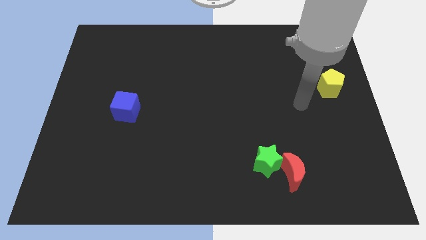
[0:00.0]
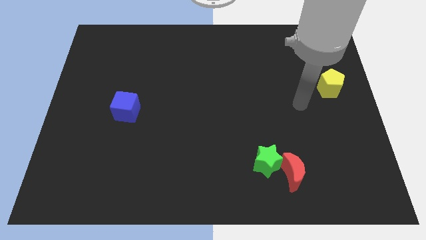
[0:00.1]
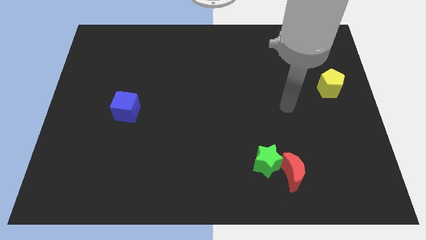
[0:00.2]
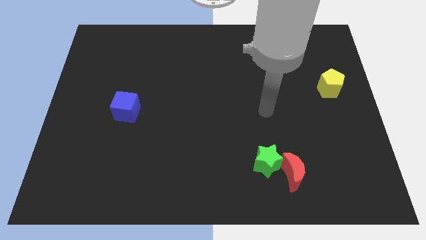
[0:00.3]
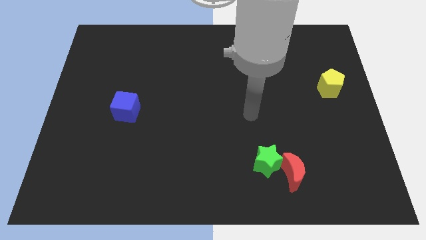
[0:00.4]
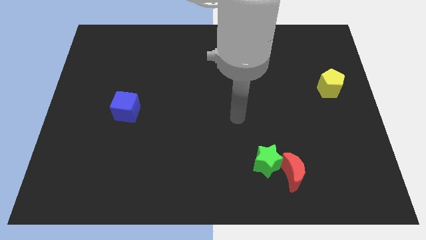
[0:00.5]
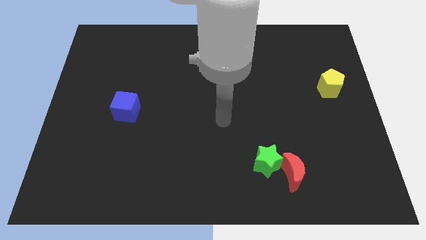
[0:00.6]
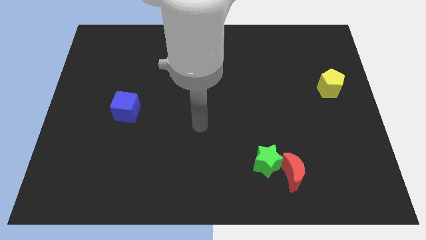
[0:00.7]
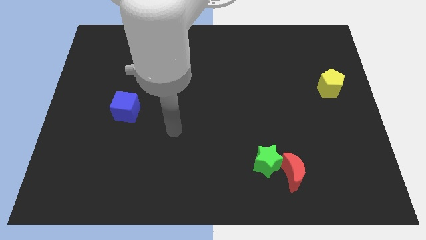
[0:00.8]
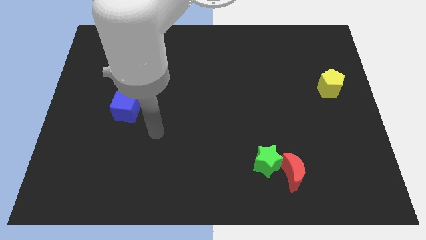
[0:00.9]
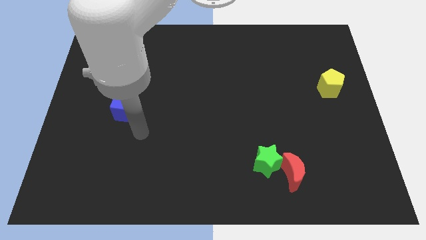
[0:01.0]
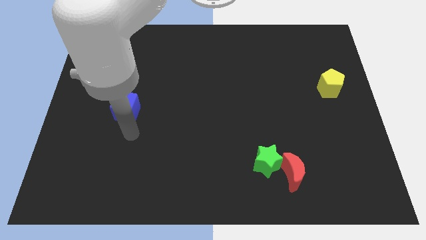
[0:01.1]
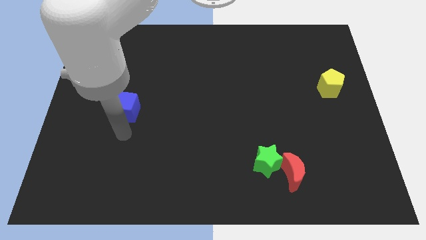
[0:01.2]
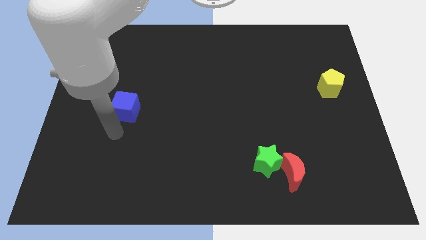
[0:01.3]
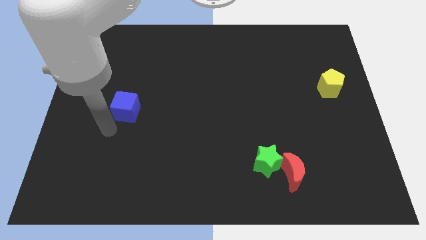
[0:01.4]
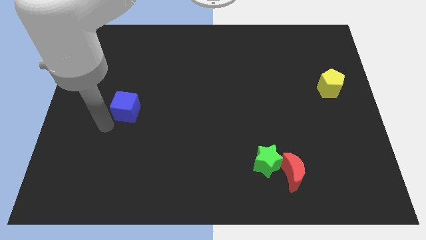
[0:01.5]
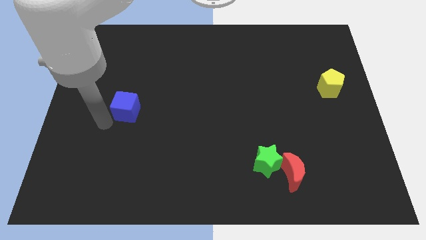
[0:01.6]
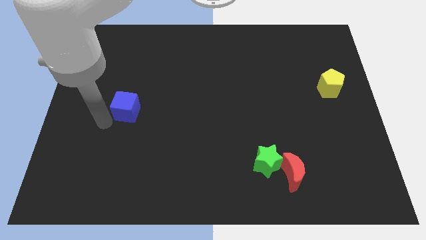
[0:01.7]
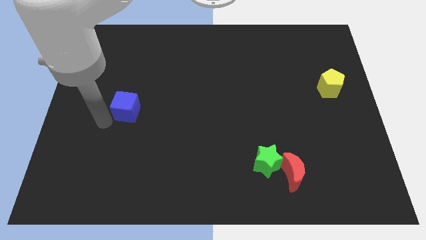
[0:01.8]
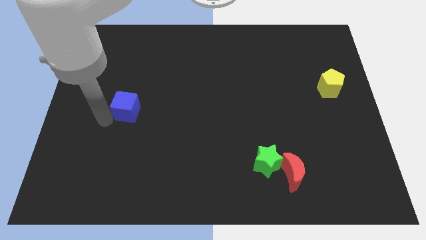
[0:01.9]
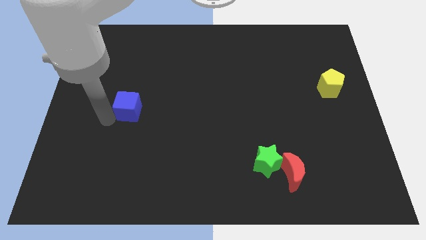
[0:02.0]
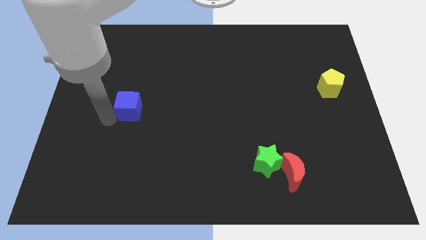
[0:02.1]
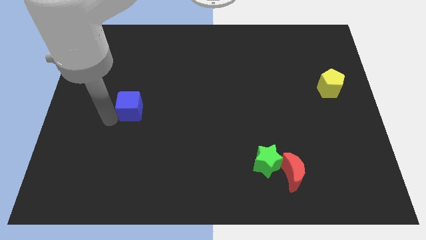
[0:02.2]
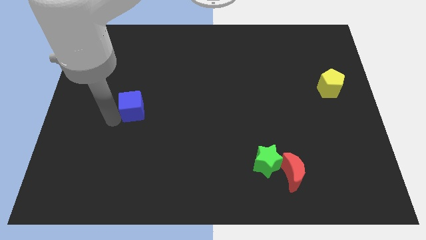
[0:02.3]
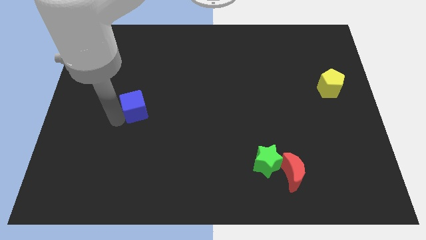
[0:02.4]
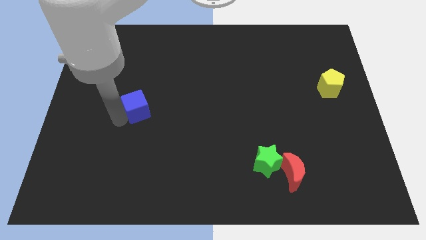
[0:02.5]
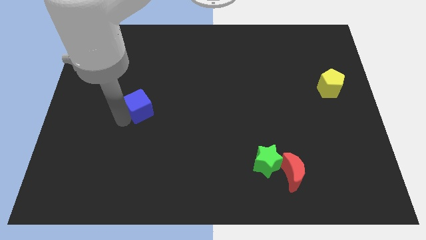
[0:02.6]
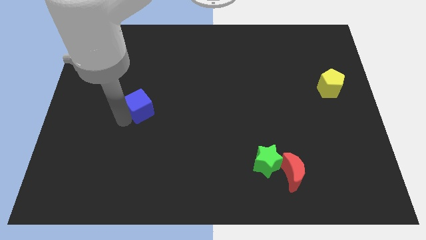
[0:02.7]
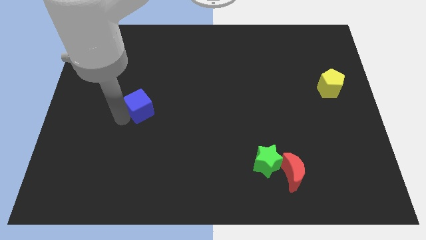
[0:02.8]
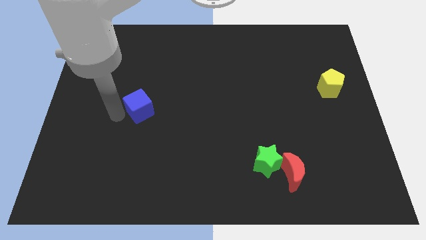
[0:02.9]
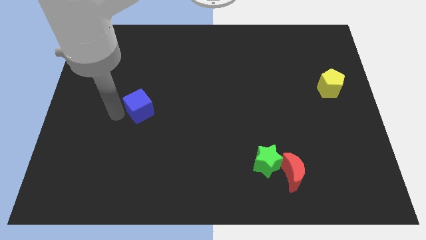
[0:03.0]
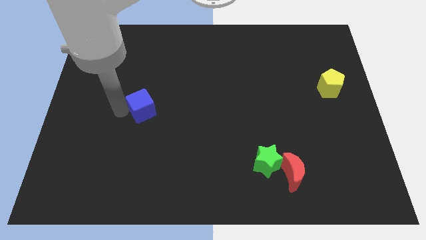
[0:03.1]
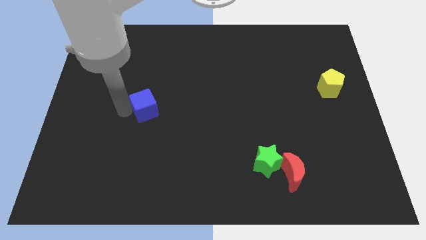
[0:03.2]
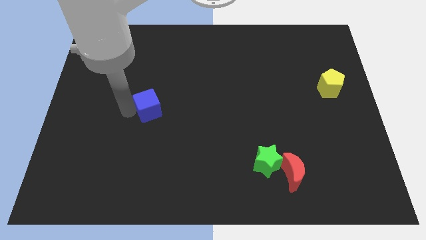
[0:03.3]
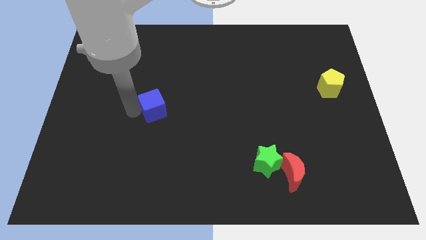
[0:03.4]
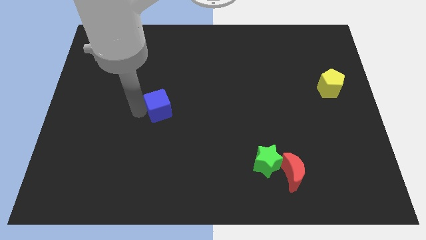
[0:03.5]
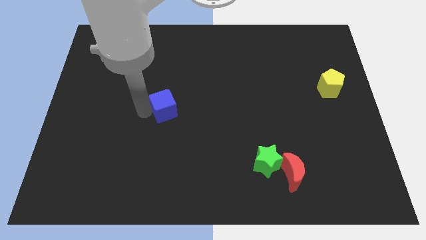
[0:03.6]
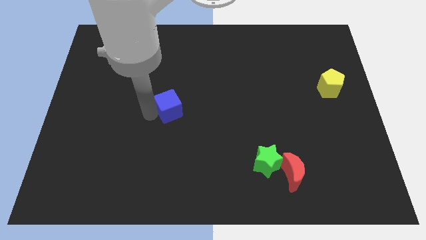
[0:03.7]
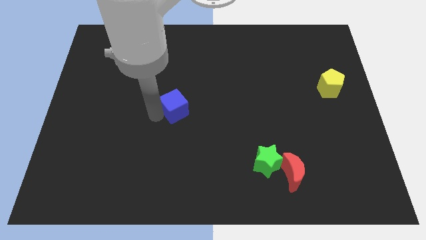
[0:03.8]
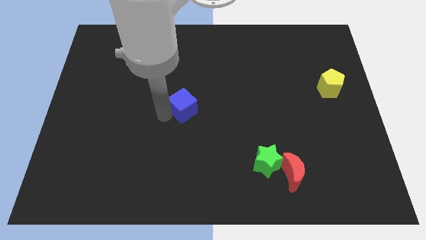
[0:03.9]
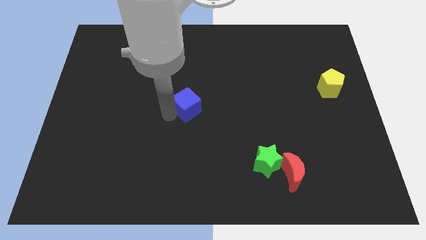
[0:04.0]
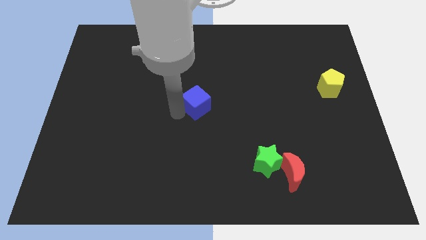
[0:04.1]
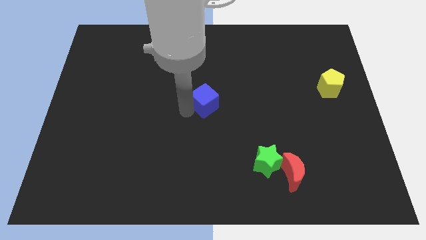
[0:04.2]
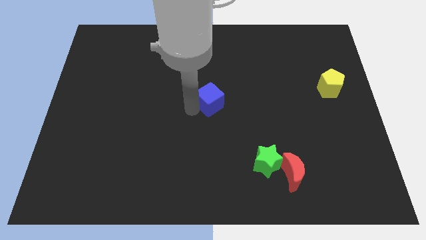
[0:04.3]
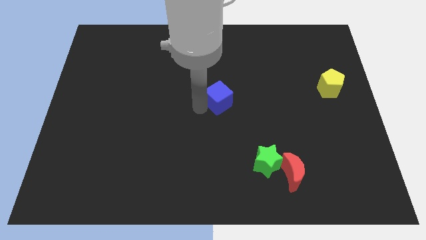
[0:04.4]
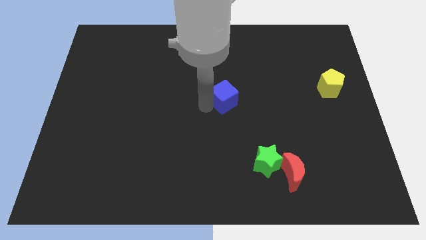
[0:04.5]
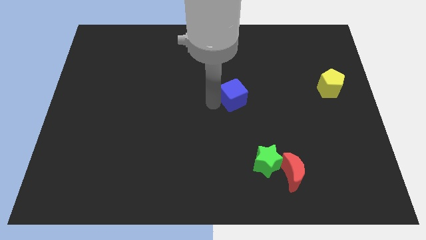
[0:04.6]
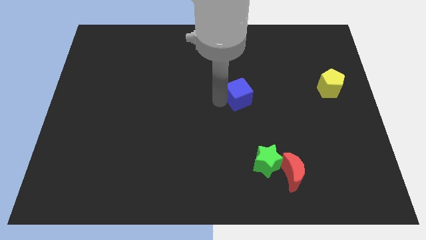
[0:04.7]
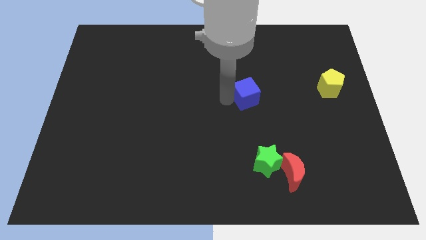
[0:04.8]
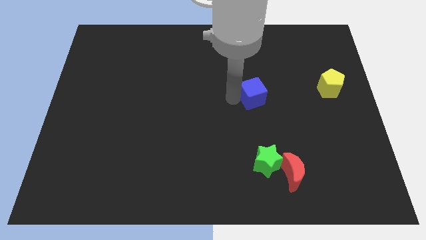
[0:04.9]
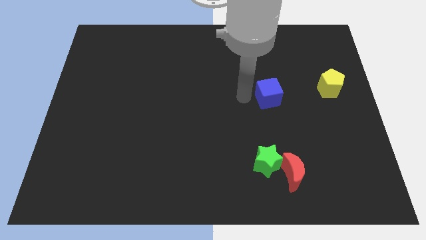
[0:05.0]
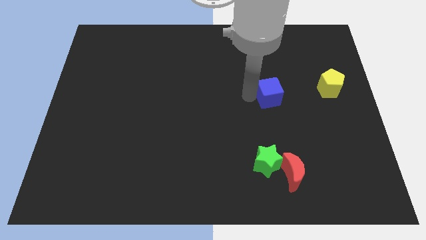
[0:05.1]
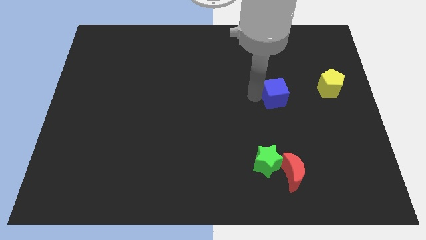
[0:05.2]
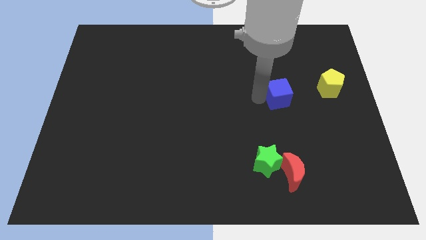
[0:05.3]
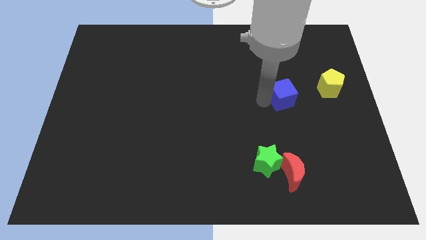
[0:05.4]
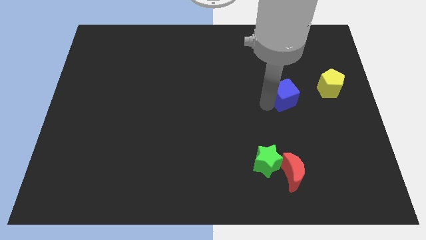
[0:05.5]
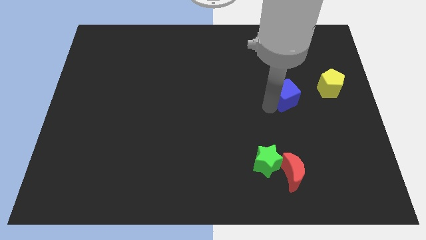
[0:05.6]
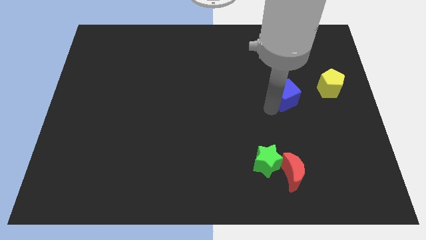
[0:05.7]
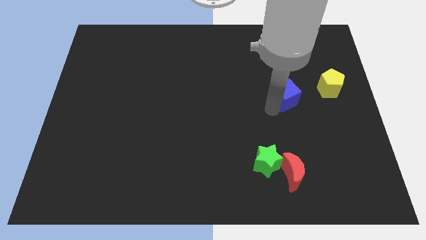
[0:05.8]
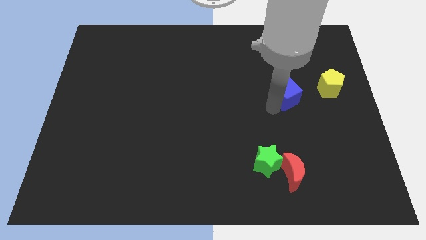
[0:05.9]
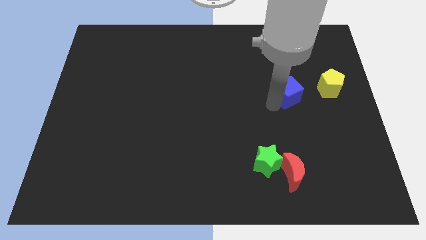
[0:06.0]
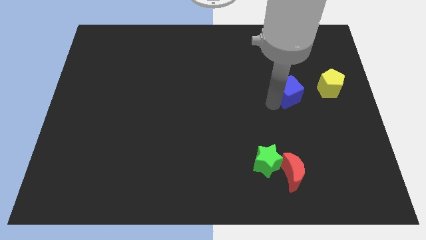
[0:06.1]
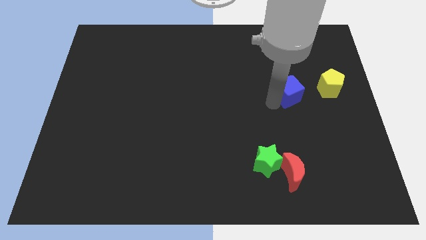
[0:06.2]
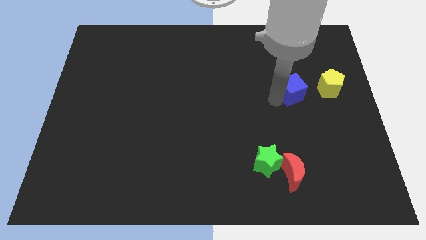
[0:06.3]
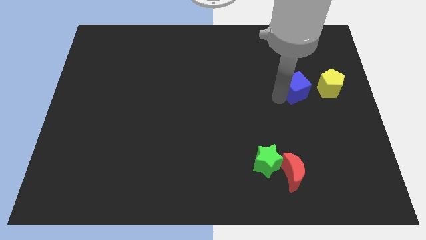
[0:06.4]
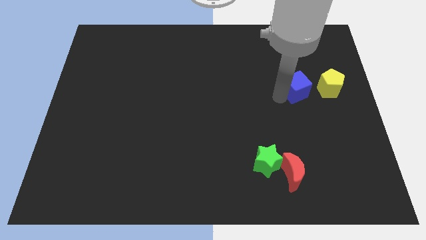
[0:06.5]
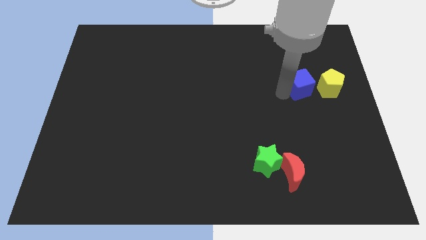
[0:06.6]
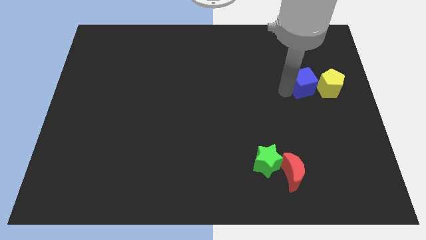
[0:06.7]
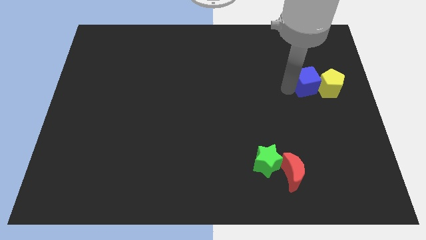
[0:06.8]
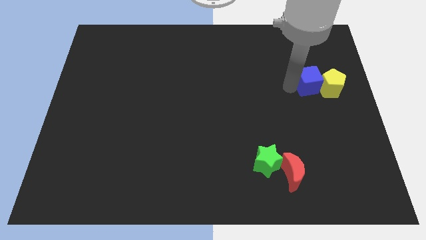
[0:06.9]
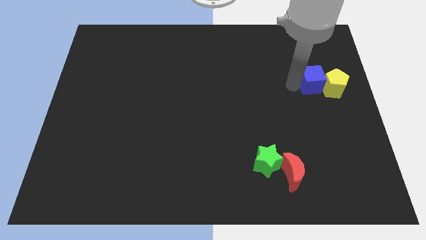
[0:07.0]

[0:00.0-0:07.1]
put the cube close to the yellow pentagon

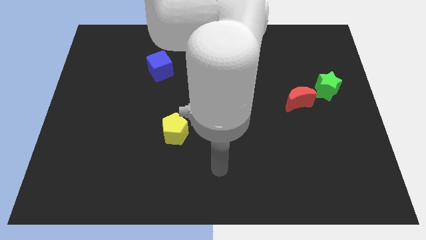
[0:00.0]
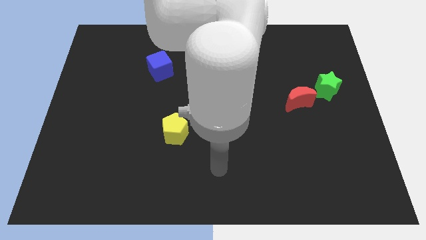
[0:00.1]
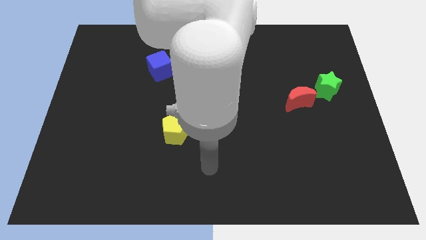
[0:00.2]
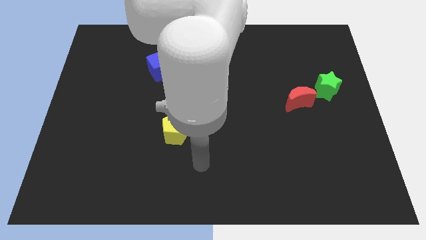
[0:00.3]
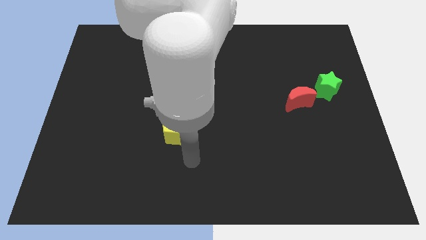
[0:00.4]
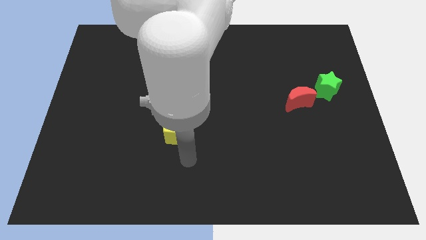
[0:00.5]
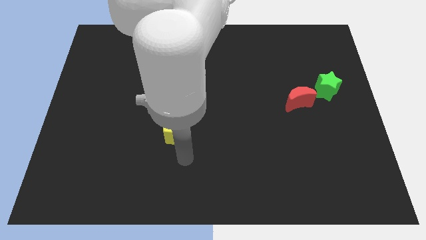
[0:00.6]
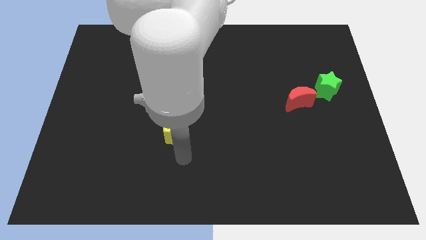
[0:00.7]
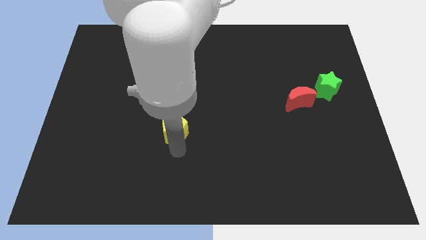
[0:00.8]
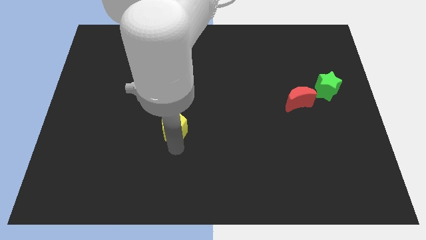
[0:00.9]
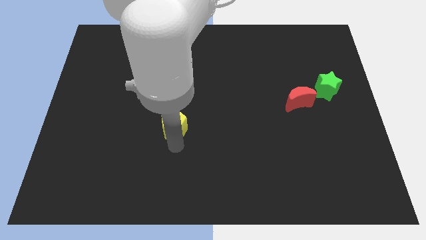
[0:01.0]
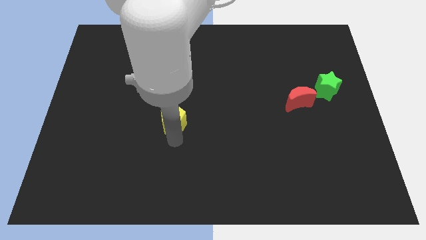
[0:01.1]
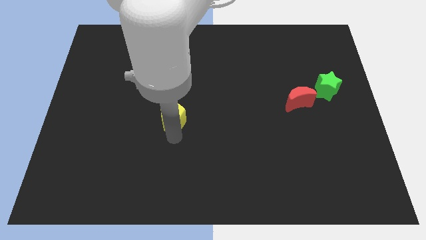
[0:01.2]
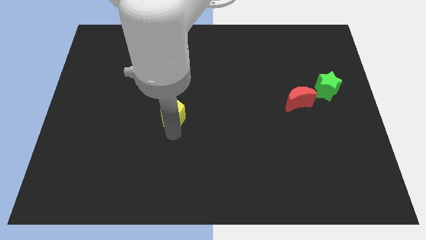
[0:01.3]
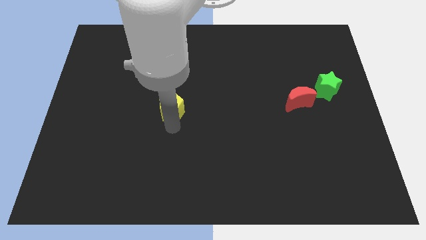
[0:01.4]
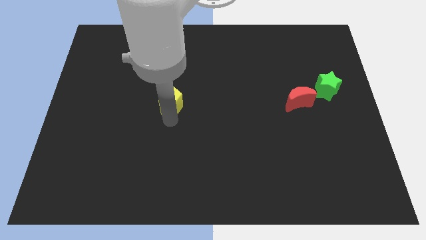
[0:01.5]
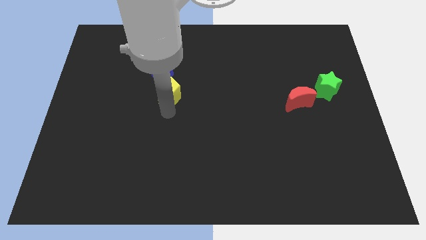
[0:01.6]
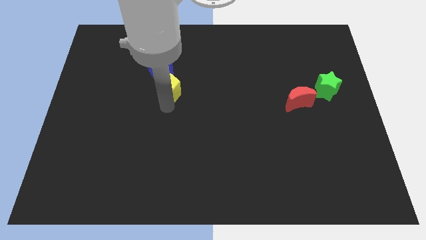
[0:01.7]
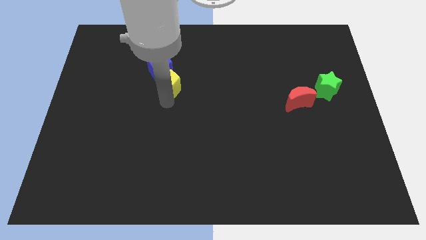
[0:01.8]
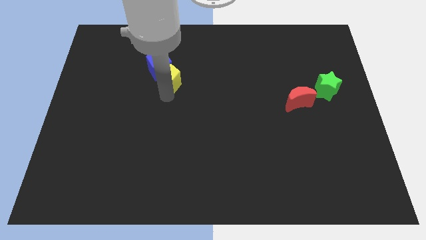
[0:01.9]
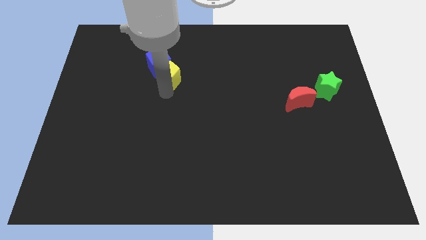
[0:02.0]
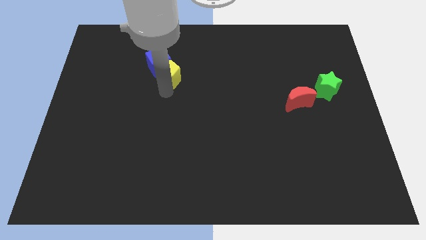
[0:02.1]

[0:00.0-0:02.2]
push the yellow pentagon next to the blue block
